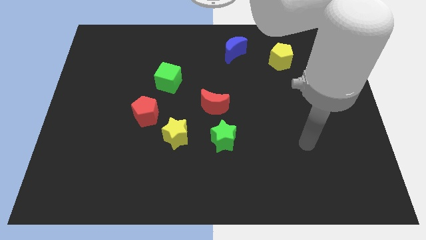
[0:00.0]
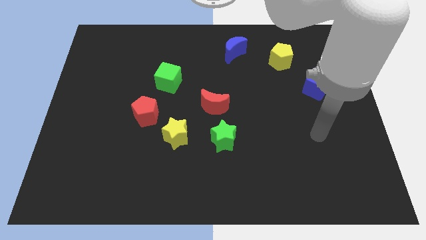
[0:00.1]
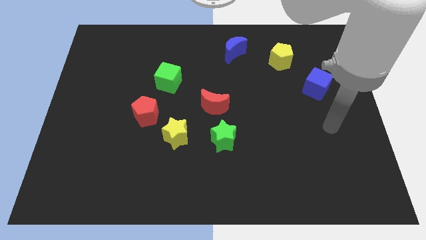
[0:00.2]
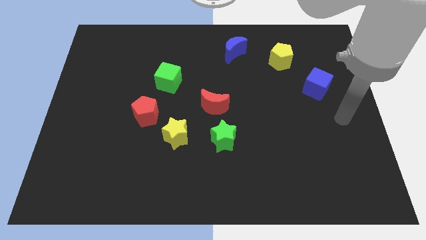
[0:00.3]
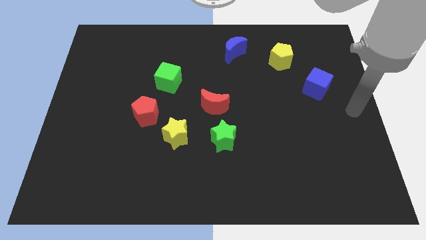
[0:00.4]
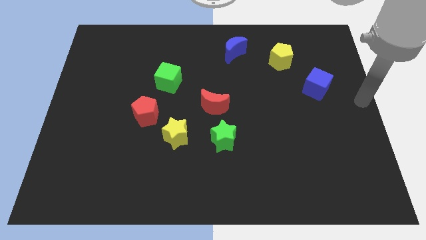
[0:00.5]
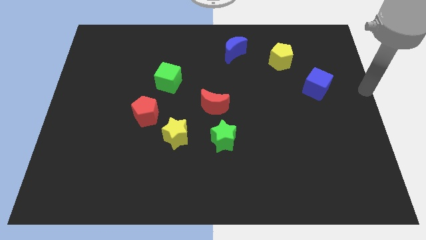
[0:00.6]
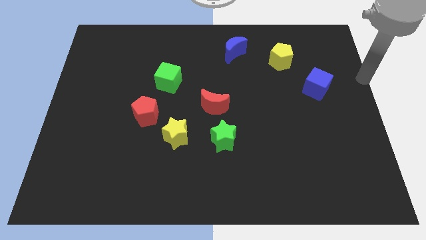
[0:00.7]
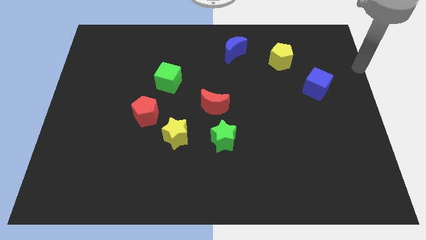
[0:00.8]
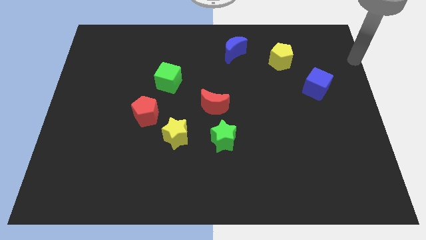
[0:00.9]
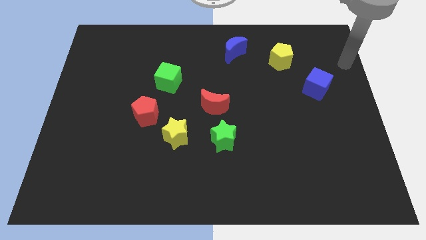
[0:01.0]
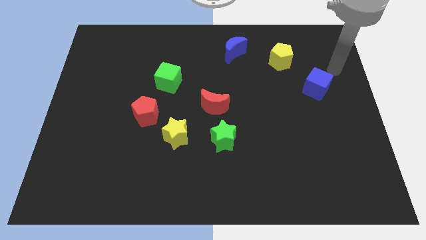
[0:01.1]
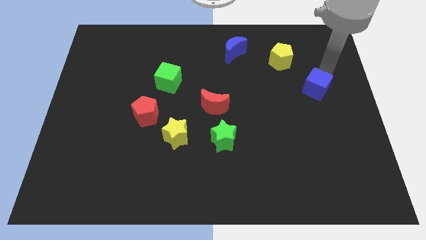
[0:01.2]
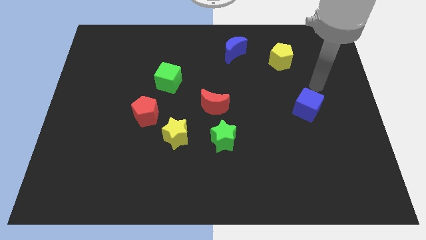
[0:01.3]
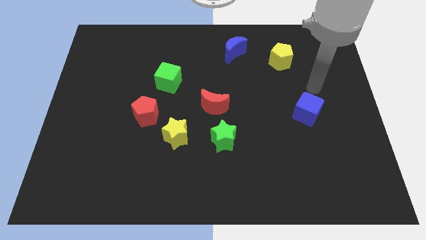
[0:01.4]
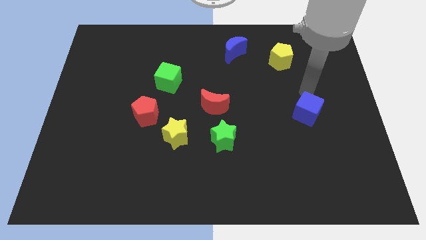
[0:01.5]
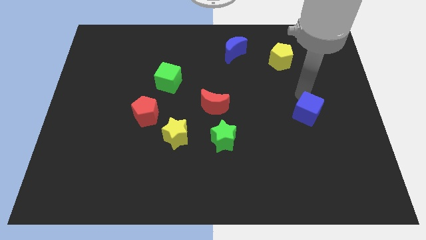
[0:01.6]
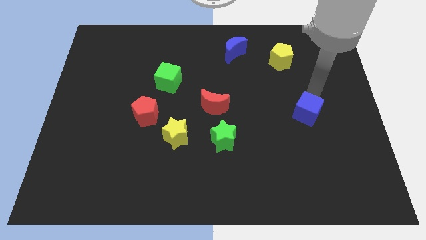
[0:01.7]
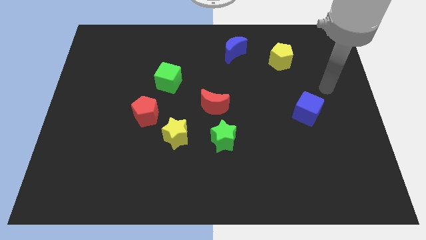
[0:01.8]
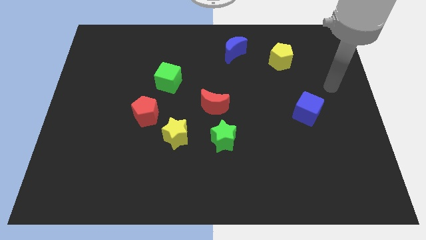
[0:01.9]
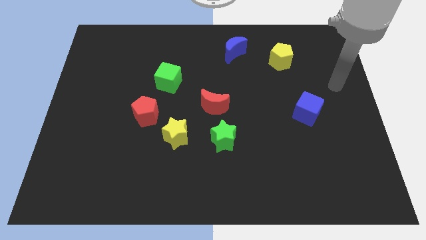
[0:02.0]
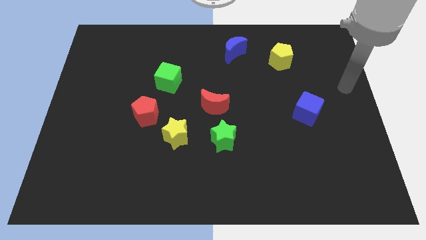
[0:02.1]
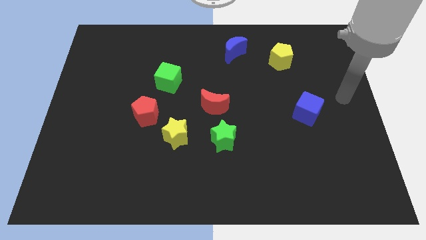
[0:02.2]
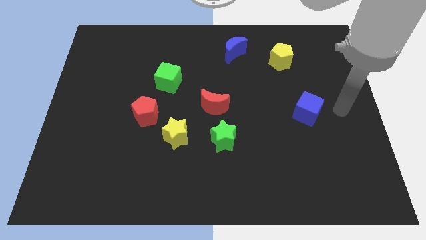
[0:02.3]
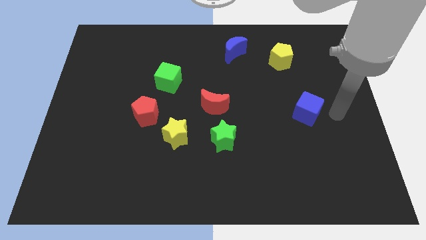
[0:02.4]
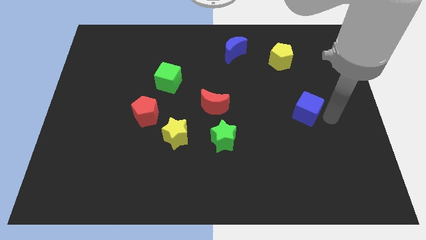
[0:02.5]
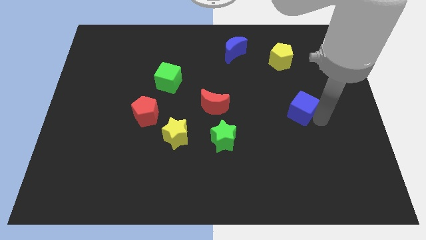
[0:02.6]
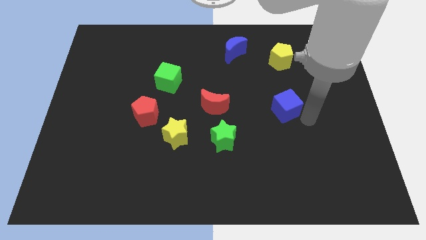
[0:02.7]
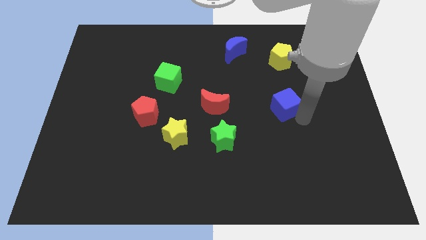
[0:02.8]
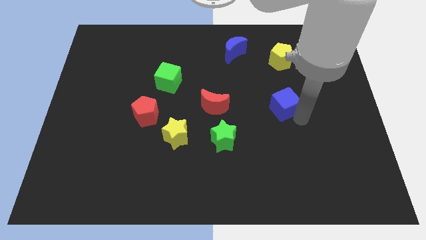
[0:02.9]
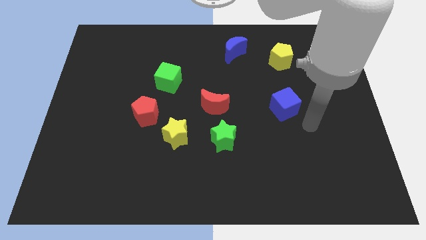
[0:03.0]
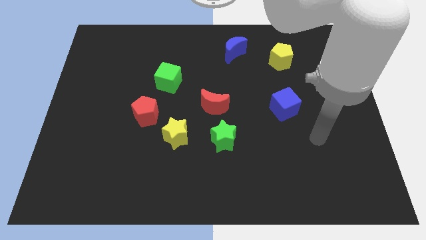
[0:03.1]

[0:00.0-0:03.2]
move blue cube slight left

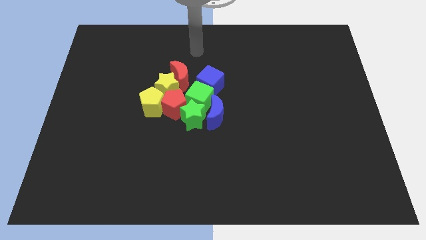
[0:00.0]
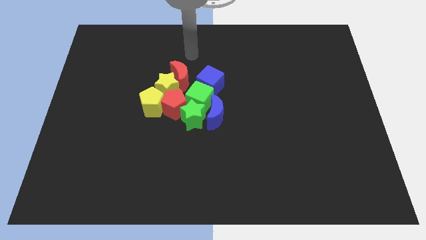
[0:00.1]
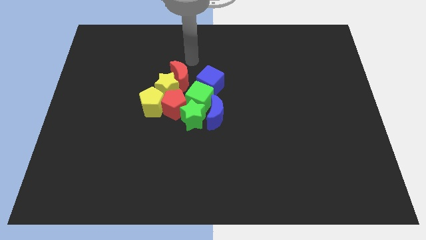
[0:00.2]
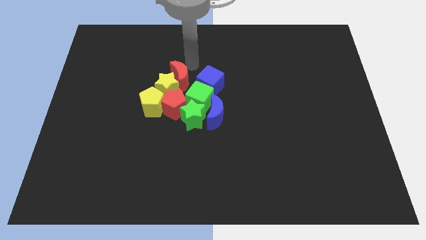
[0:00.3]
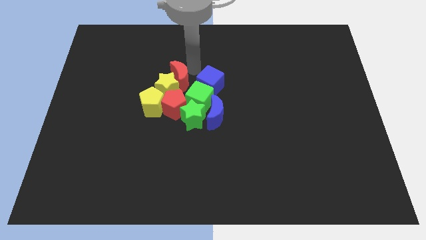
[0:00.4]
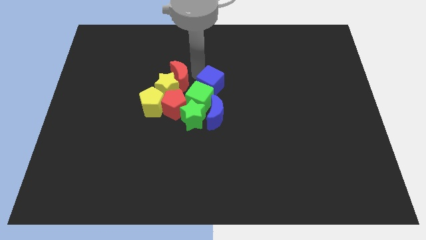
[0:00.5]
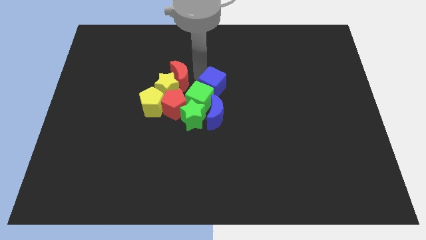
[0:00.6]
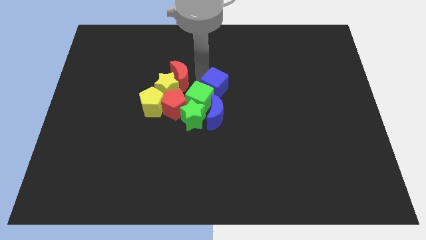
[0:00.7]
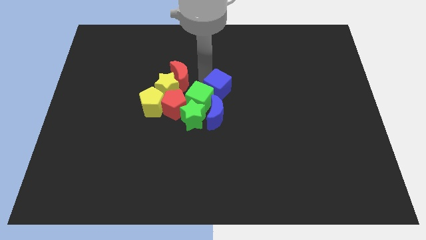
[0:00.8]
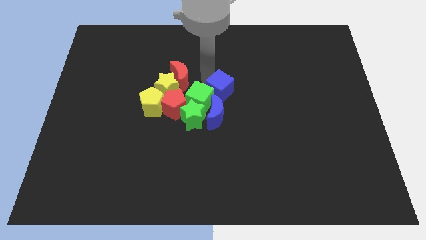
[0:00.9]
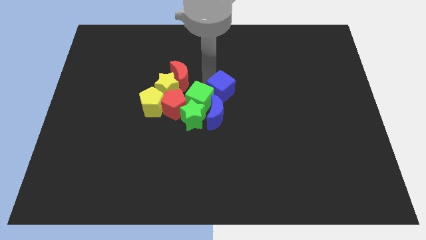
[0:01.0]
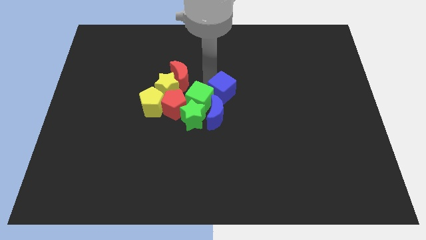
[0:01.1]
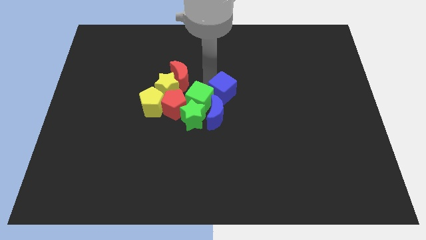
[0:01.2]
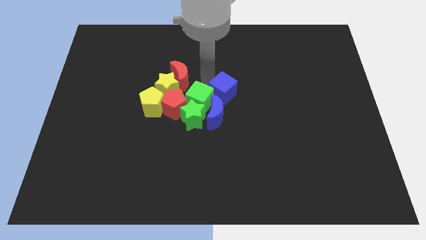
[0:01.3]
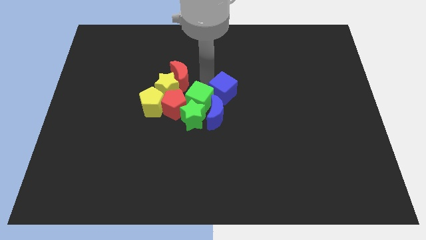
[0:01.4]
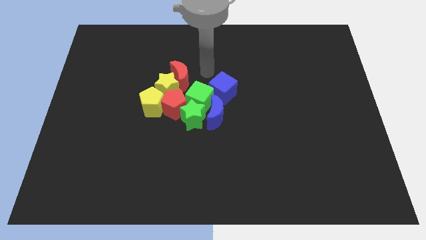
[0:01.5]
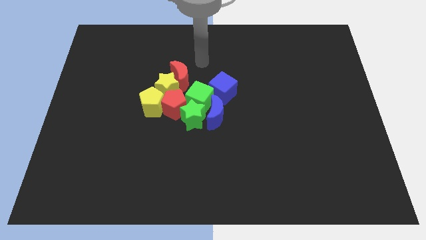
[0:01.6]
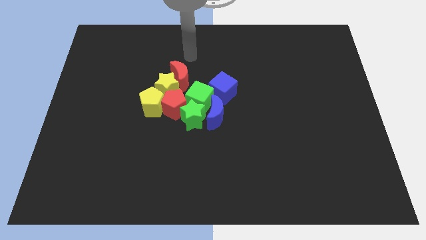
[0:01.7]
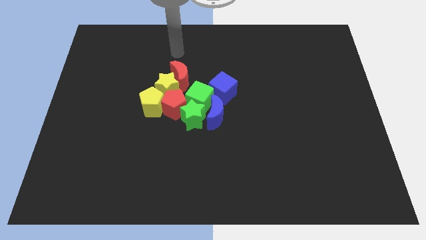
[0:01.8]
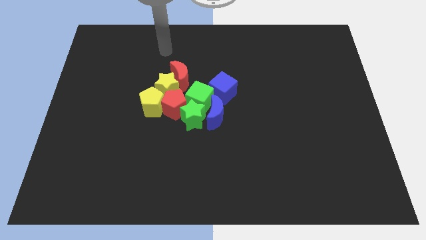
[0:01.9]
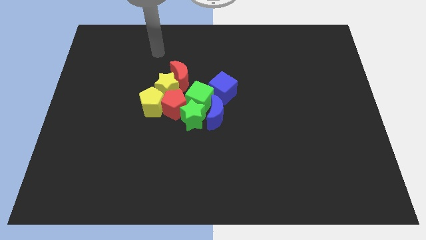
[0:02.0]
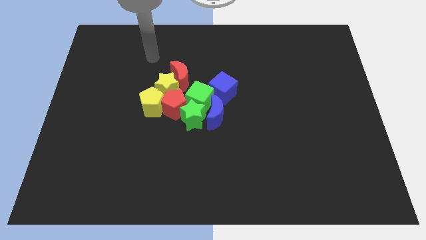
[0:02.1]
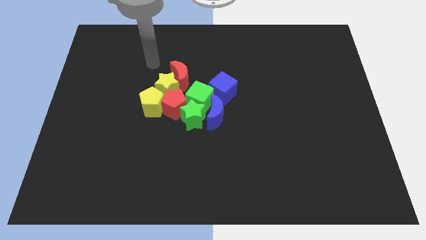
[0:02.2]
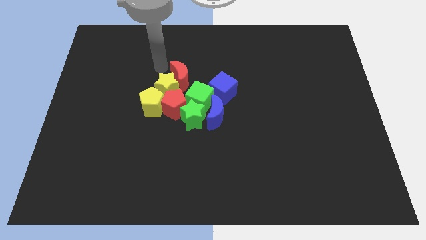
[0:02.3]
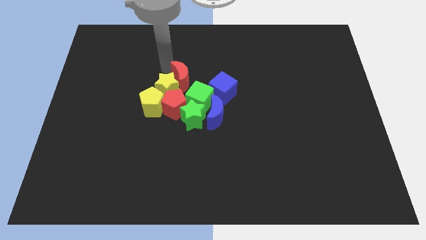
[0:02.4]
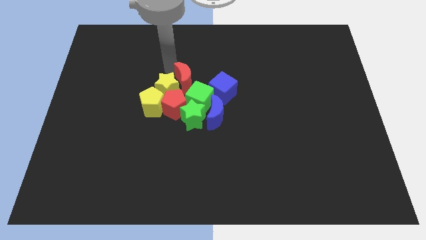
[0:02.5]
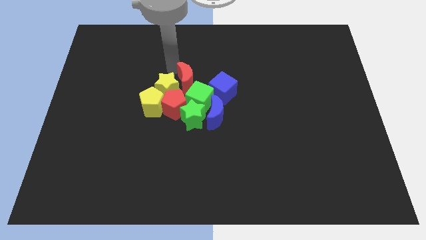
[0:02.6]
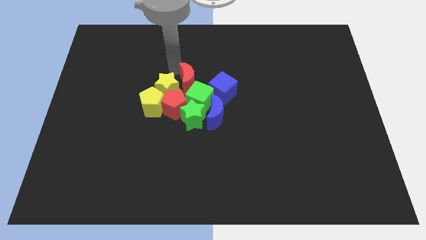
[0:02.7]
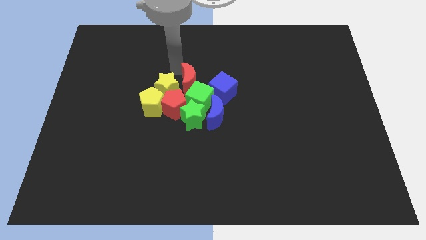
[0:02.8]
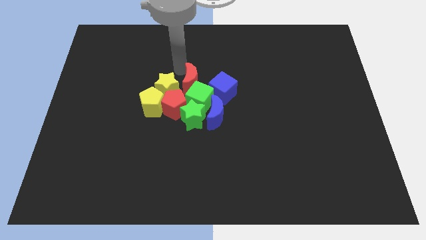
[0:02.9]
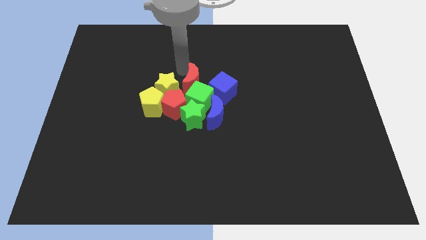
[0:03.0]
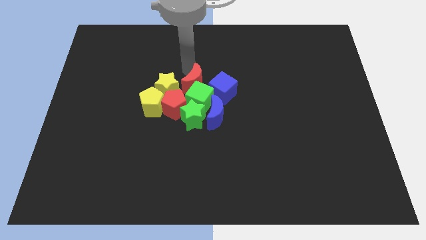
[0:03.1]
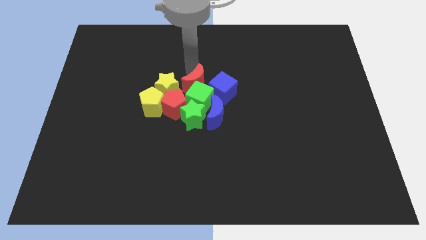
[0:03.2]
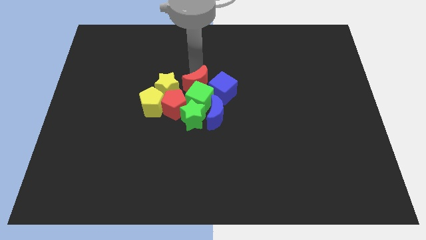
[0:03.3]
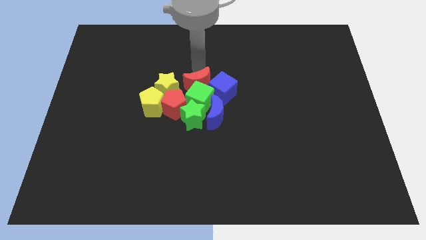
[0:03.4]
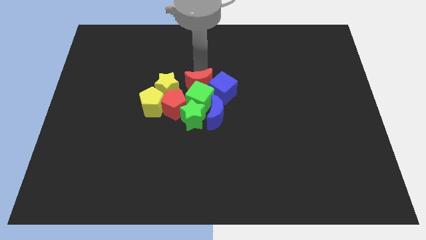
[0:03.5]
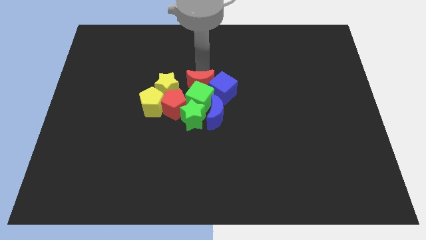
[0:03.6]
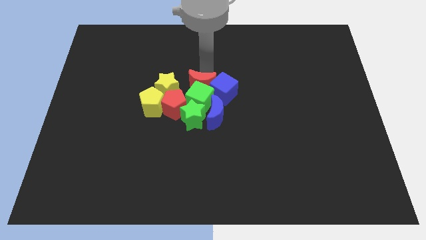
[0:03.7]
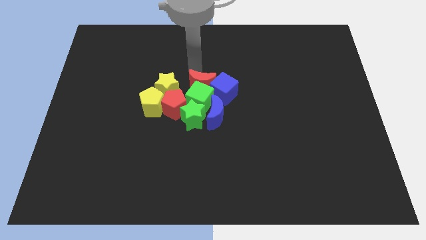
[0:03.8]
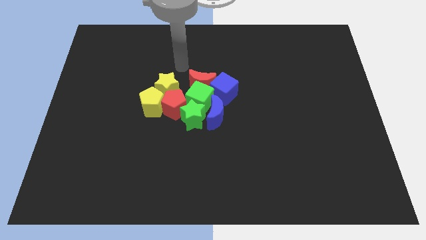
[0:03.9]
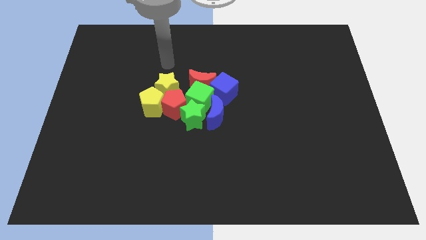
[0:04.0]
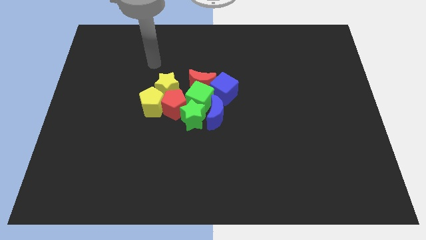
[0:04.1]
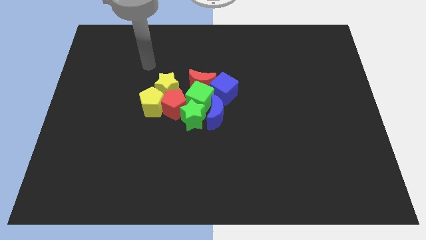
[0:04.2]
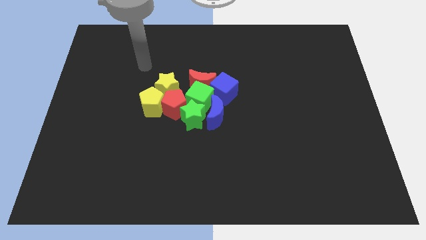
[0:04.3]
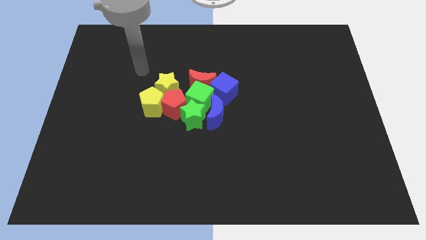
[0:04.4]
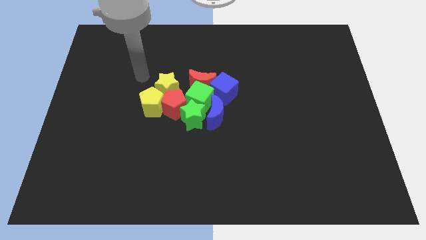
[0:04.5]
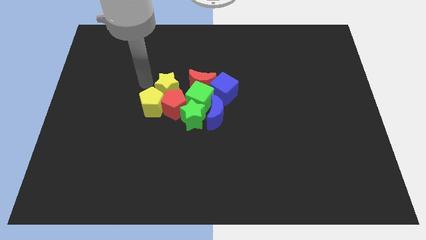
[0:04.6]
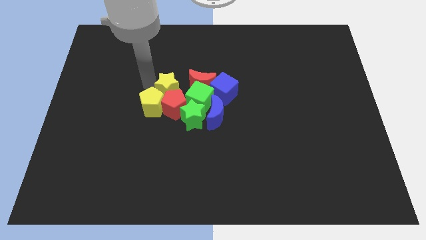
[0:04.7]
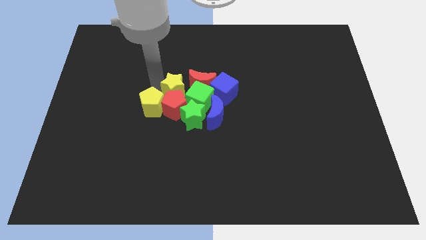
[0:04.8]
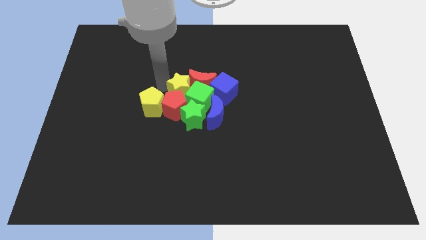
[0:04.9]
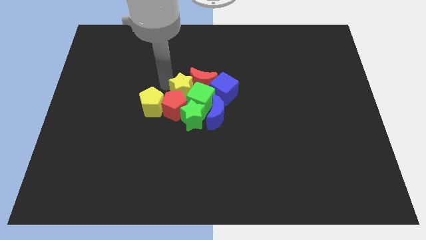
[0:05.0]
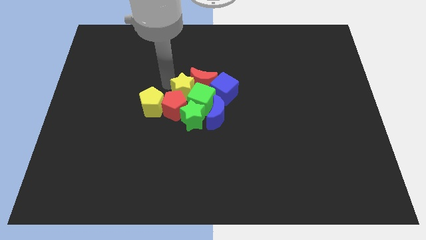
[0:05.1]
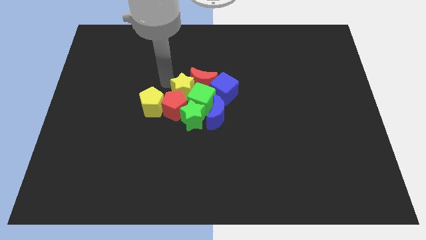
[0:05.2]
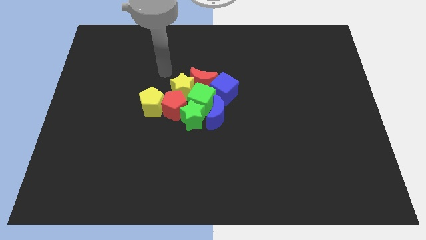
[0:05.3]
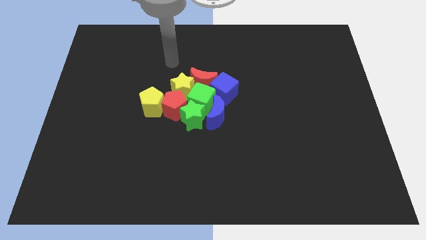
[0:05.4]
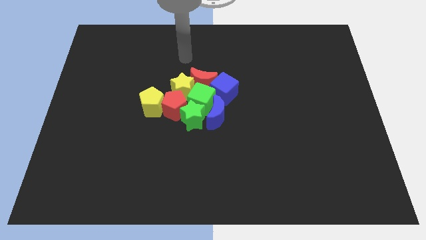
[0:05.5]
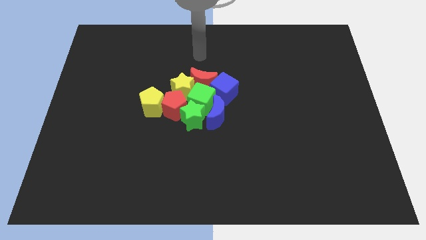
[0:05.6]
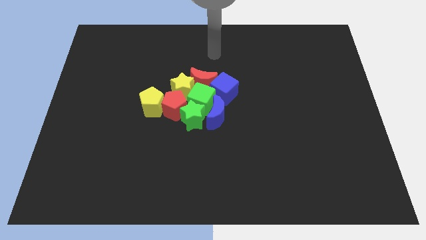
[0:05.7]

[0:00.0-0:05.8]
make all the blocks touch
